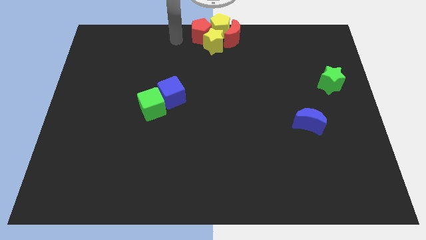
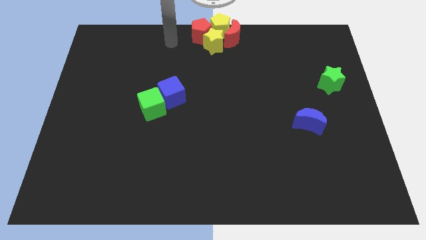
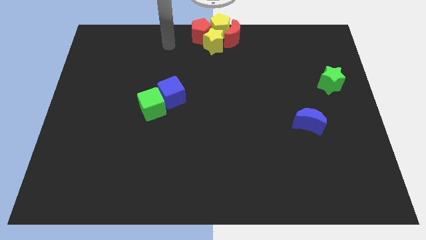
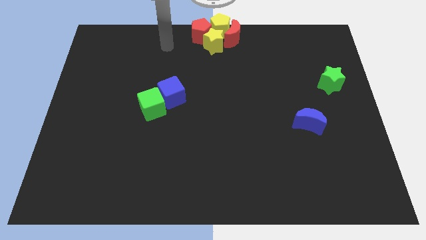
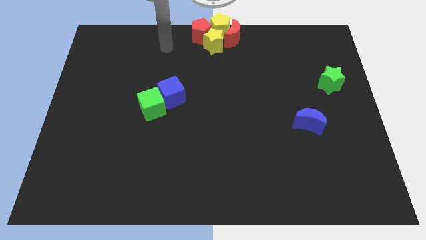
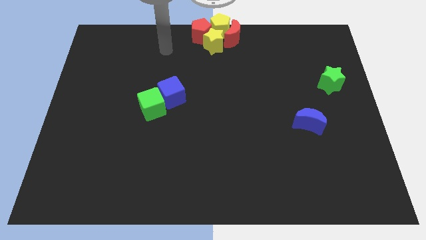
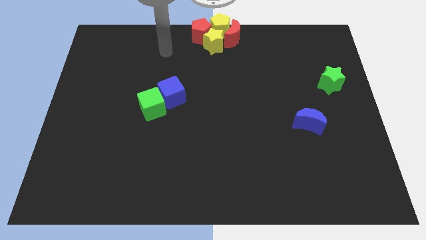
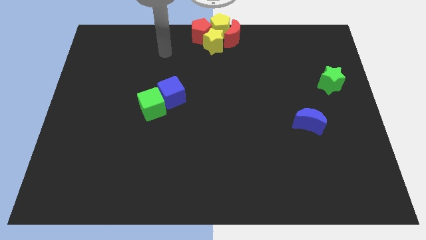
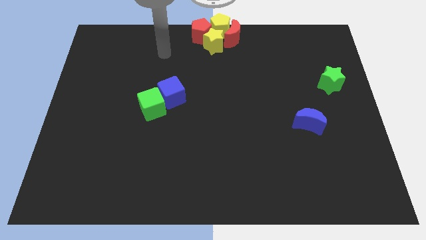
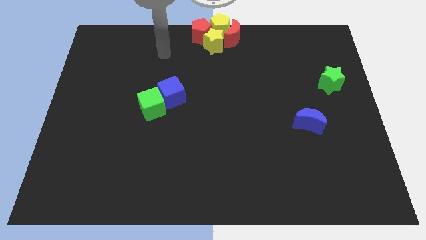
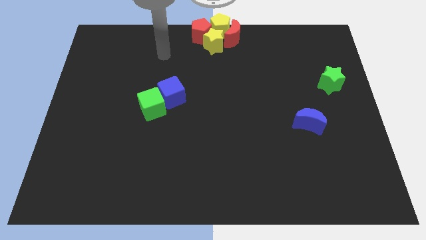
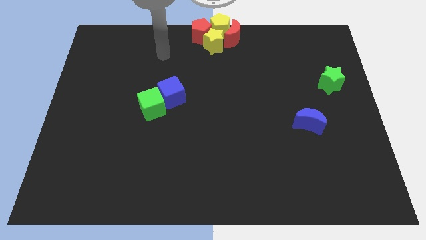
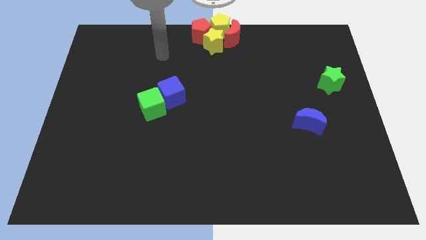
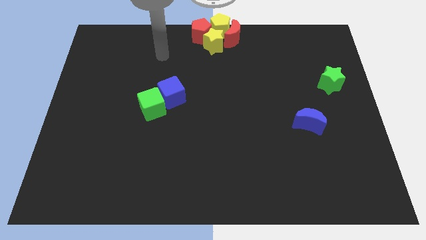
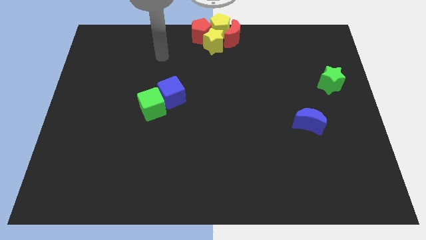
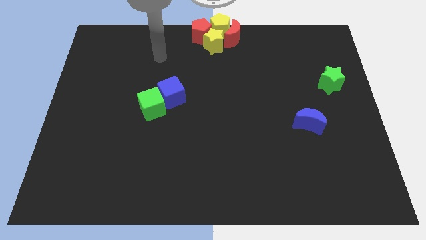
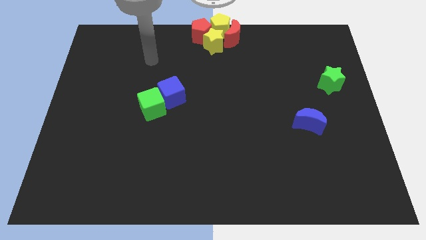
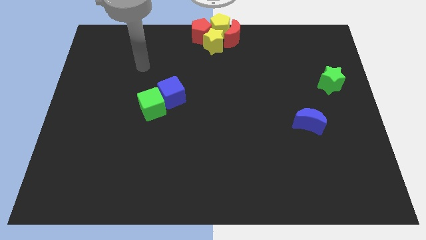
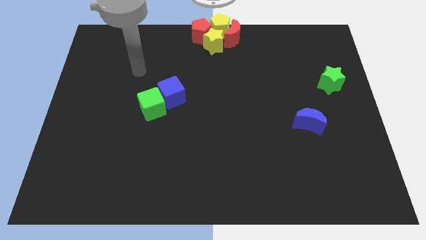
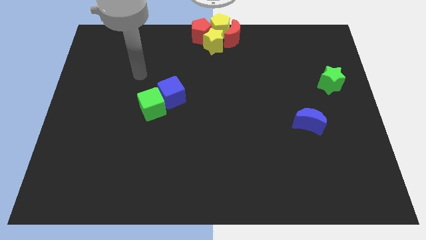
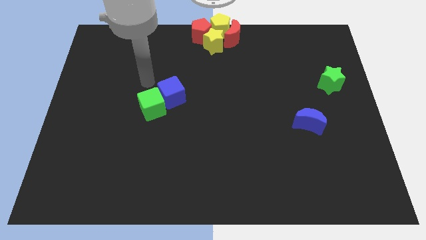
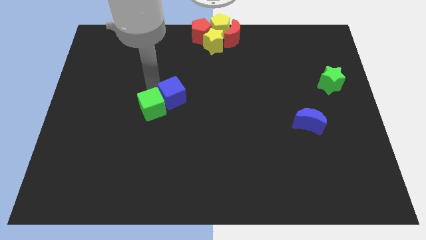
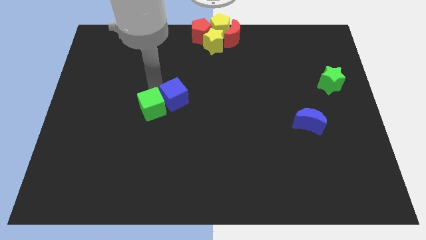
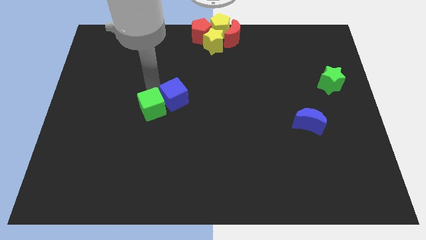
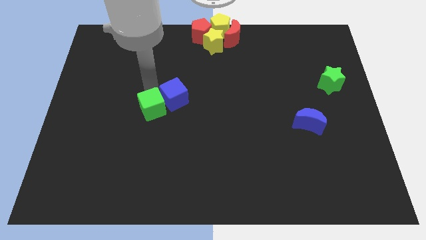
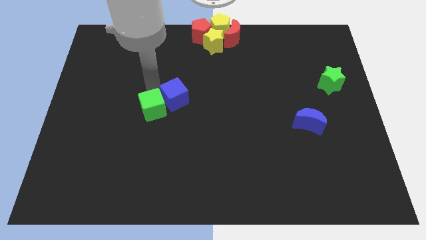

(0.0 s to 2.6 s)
move your arm towards blue cube and green cube

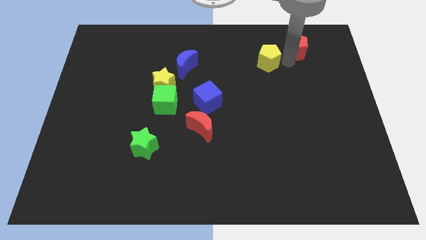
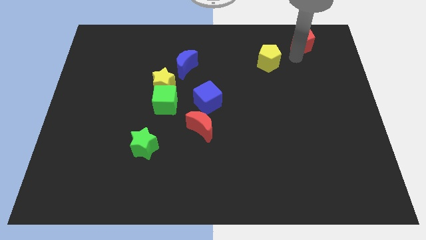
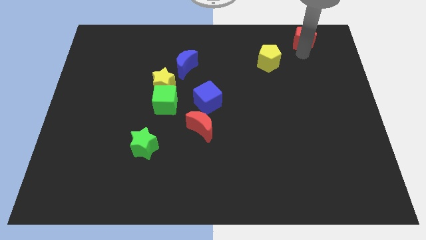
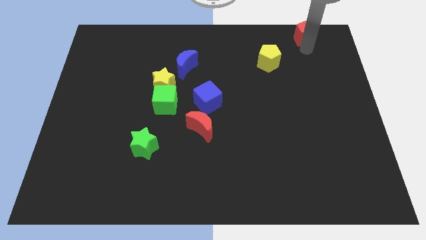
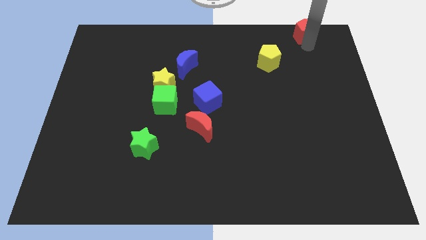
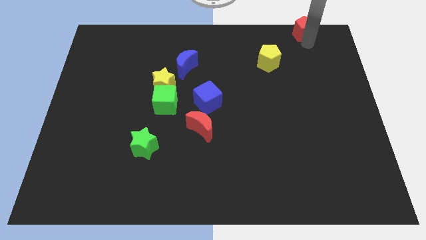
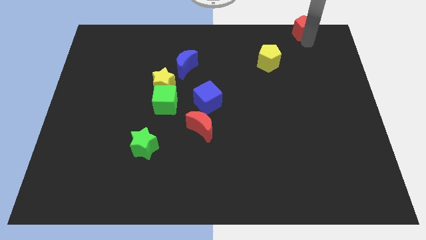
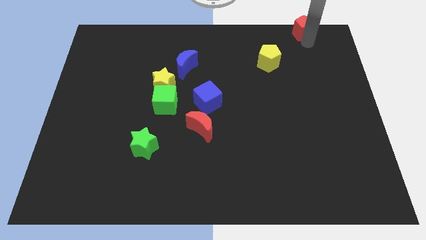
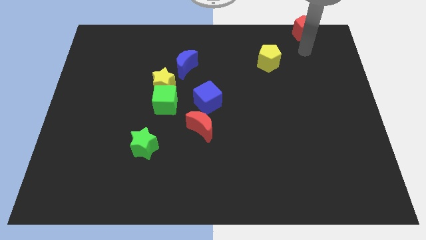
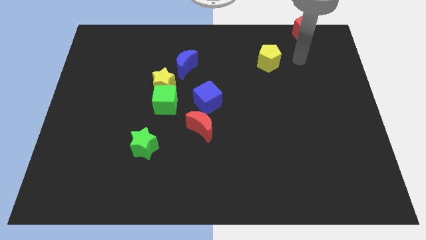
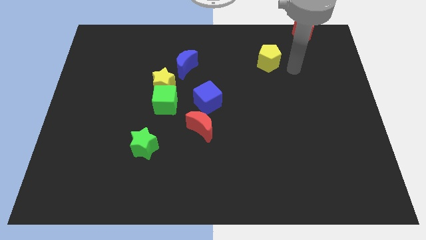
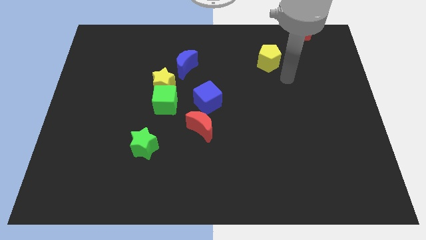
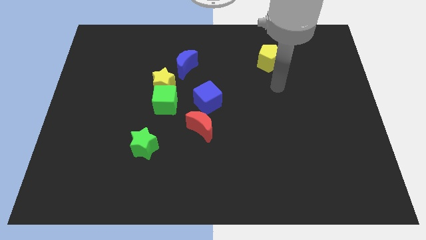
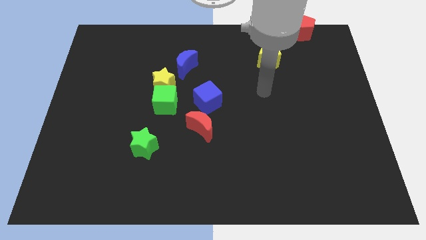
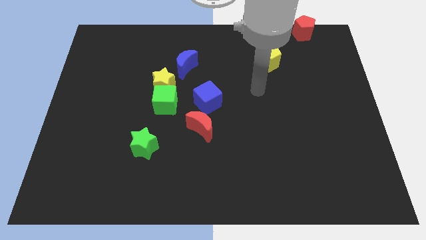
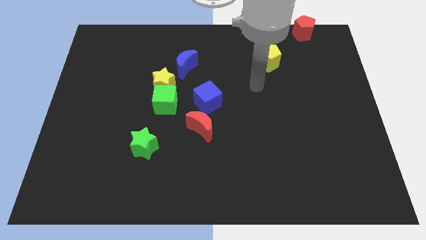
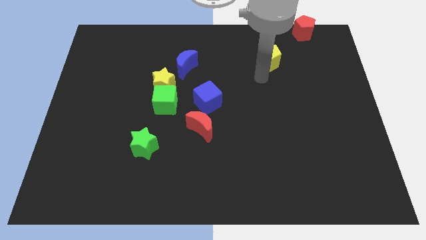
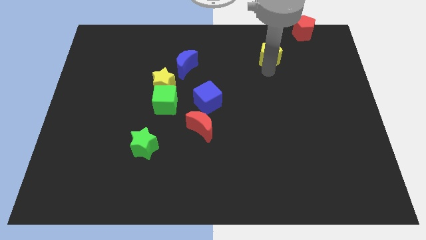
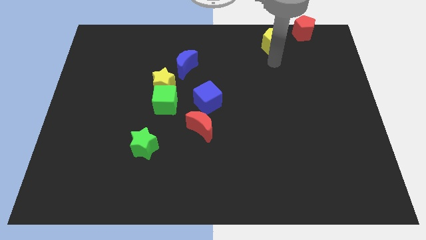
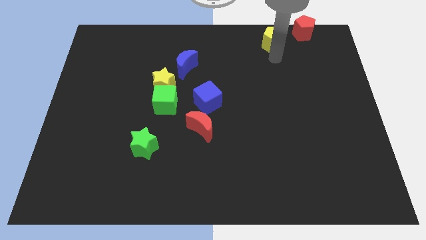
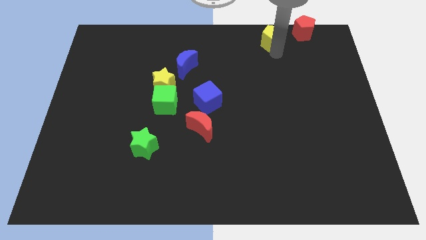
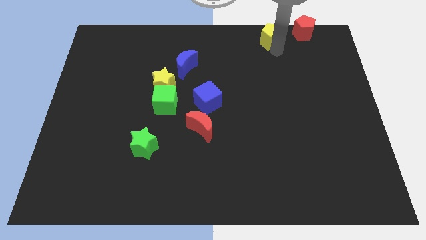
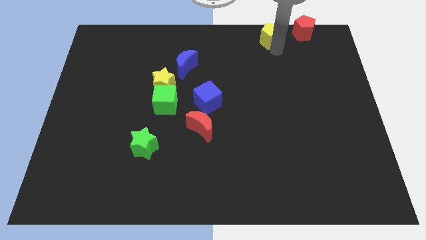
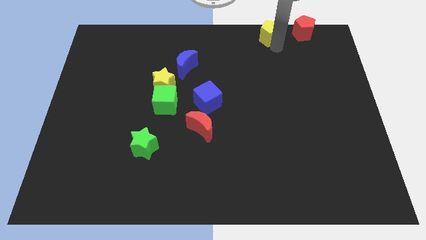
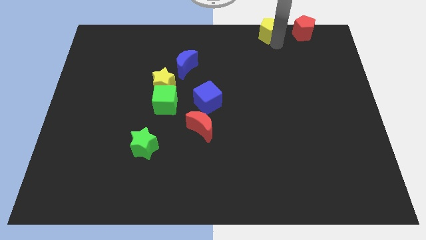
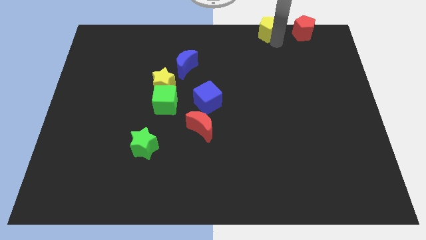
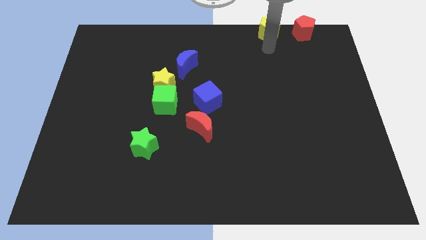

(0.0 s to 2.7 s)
place yellow pentagon beside red pentagon

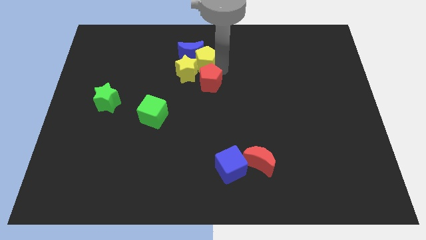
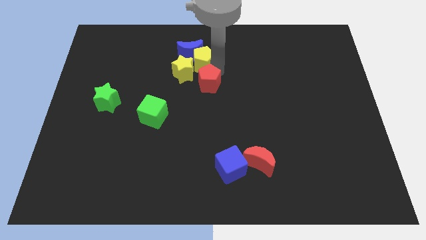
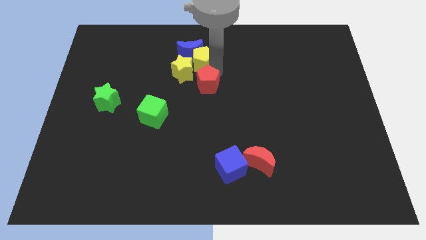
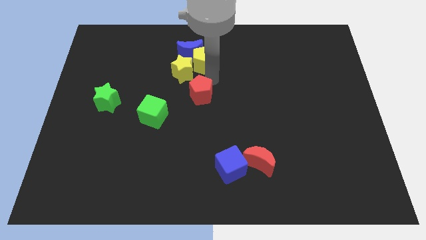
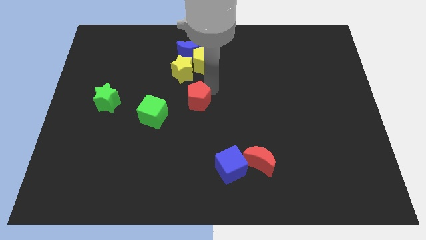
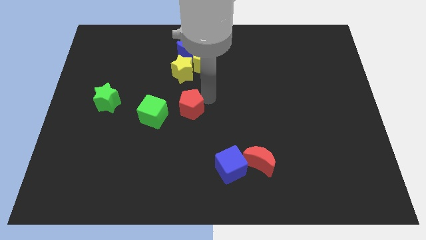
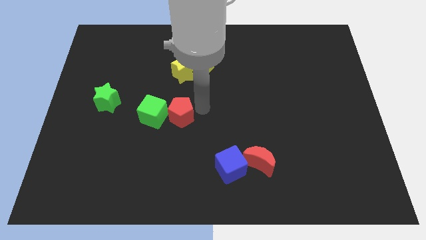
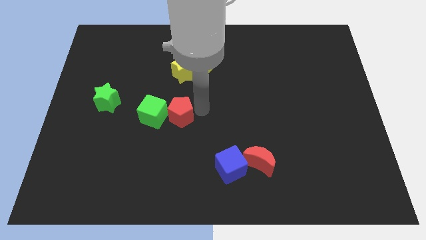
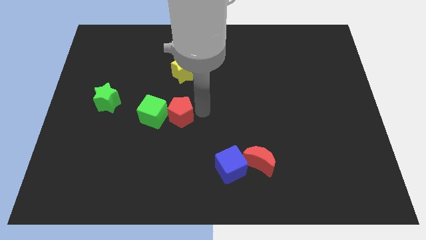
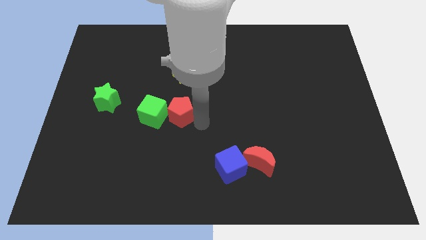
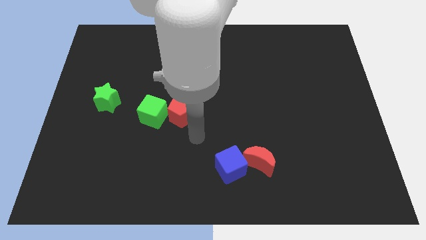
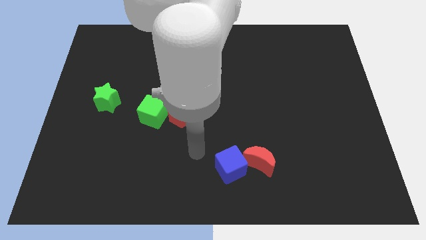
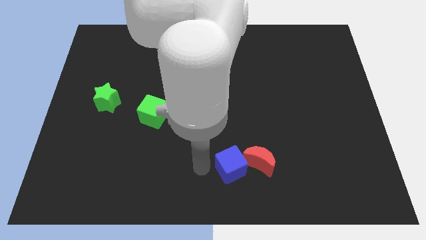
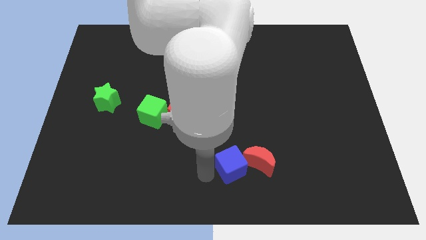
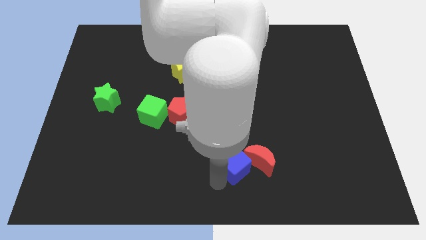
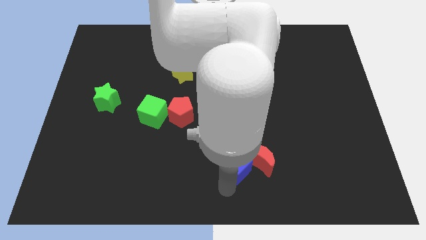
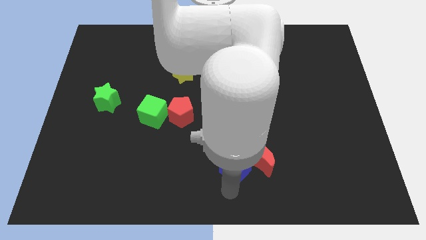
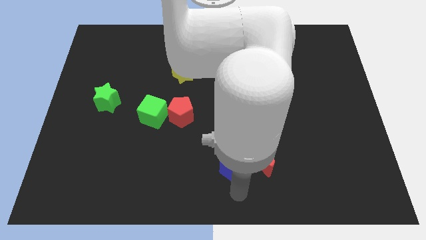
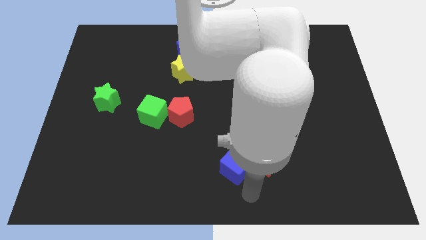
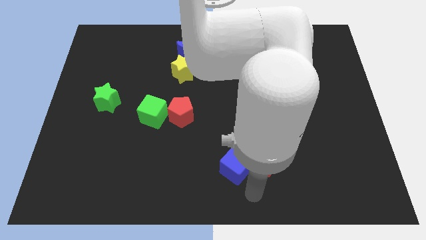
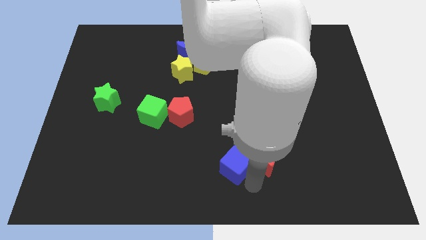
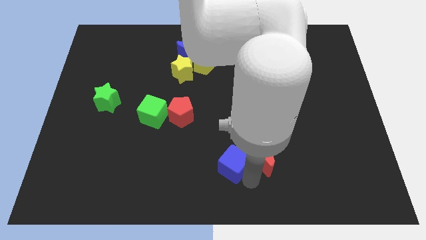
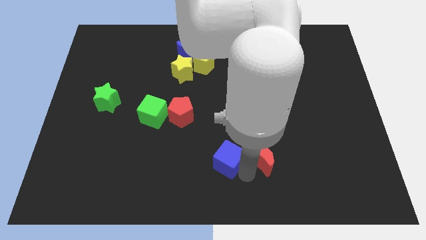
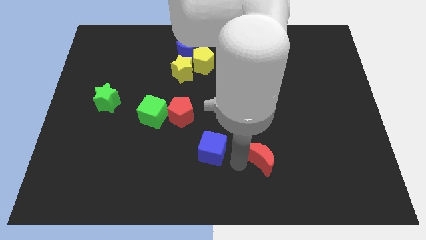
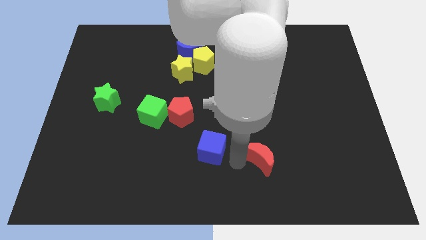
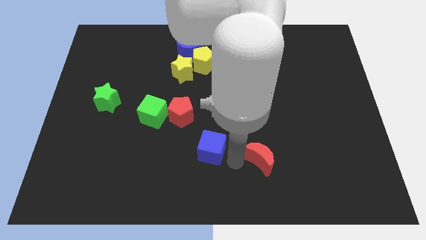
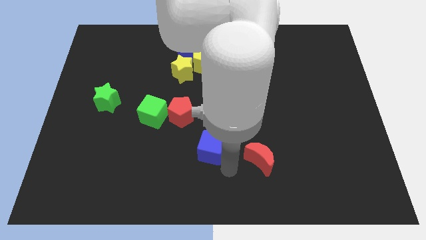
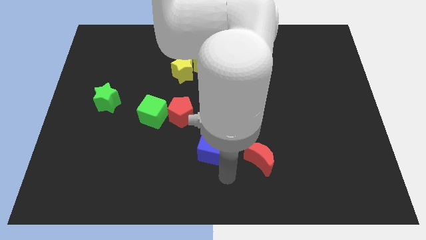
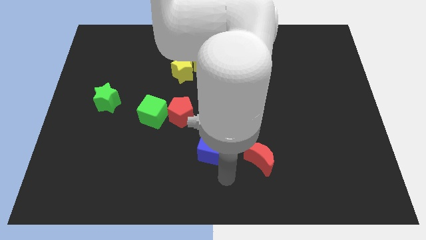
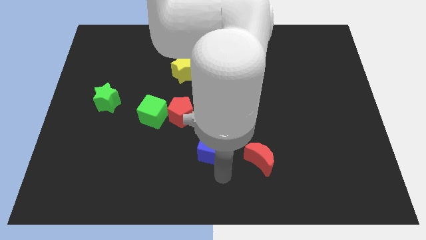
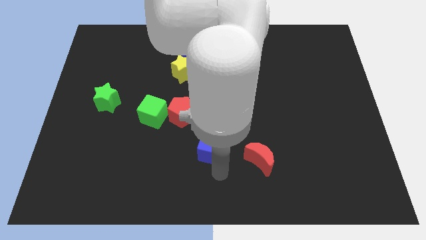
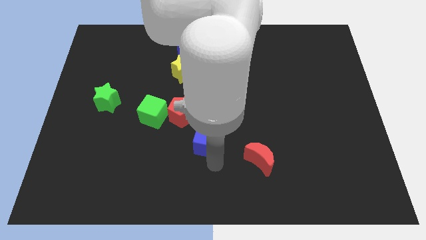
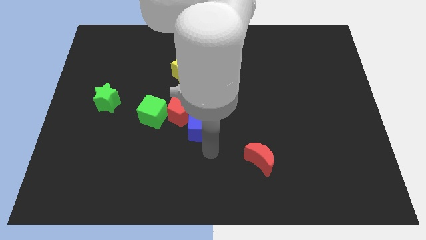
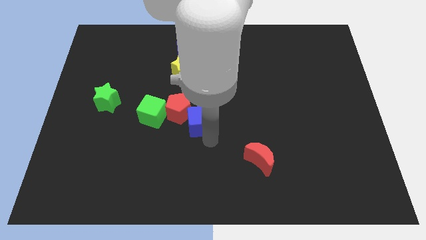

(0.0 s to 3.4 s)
place blue cube beside red pentagon

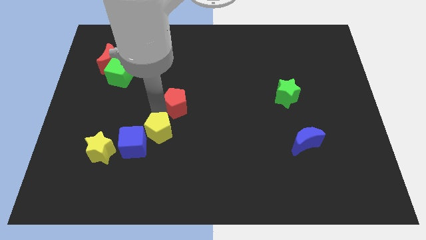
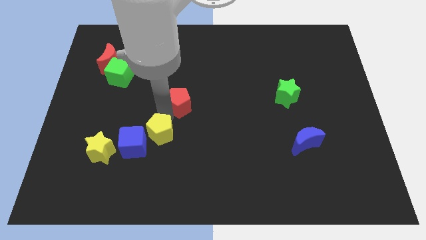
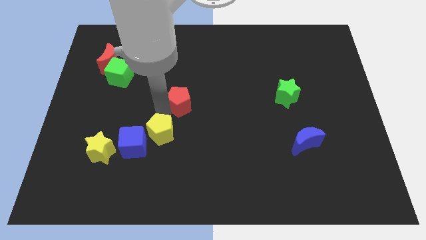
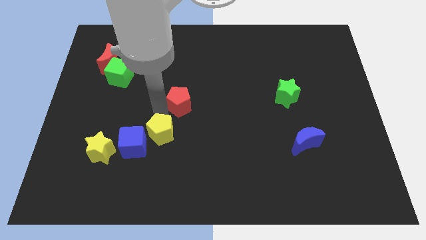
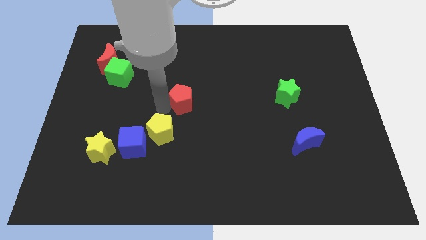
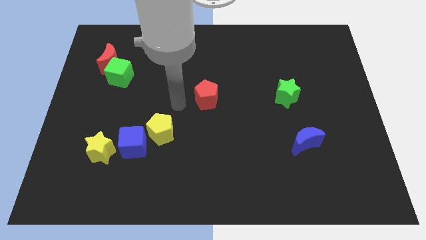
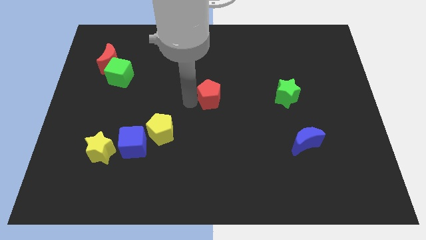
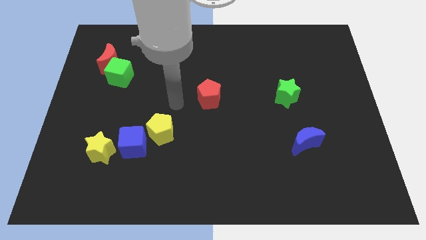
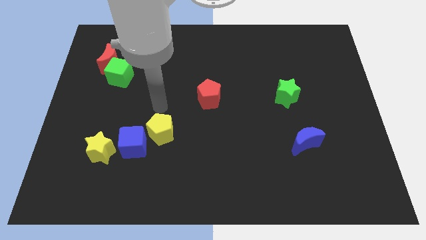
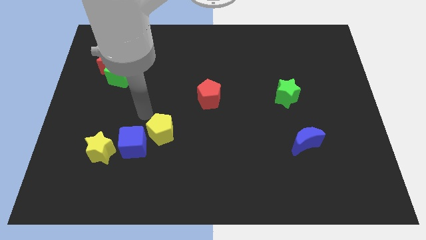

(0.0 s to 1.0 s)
place the red pentagon parallel to the green star
